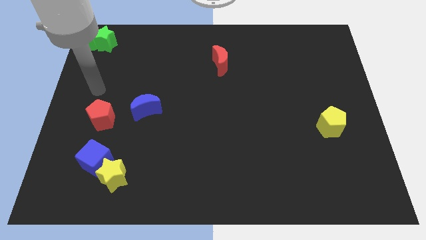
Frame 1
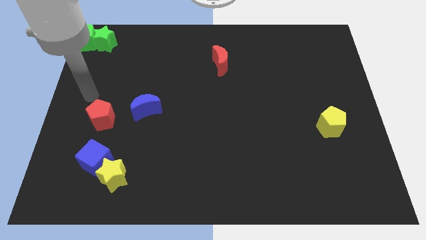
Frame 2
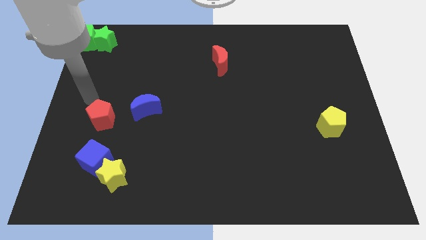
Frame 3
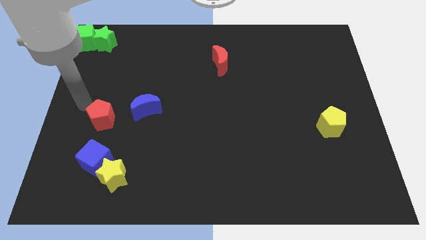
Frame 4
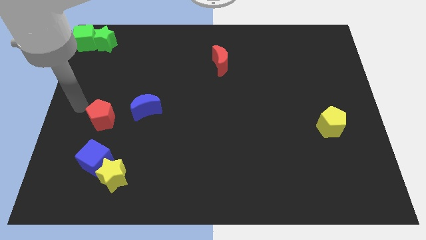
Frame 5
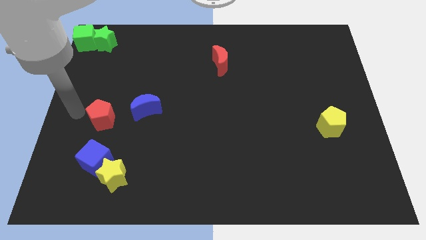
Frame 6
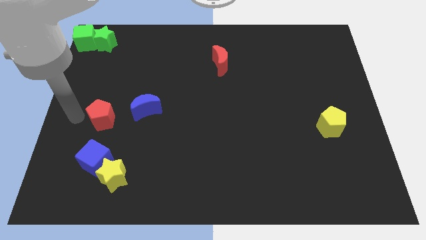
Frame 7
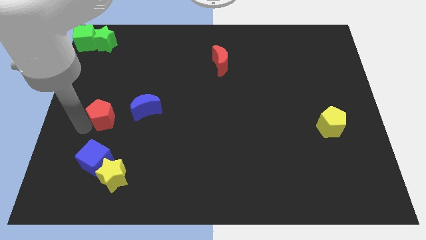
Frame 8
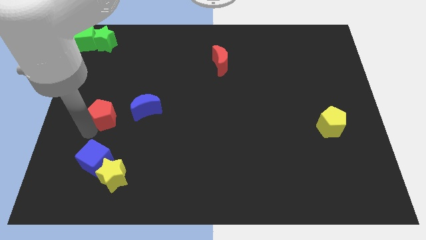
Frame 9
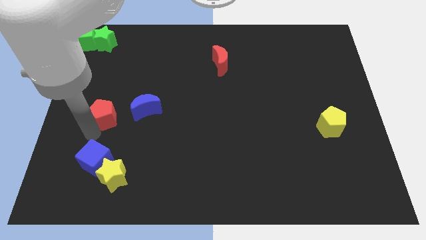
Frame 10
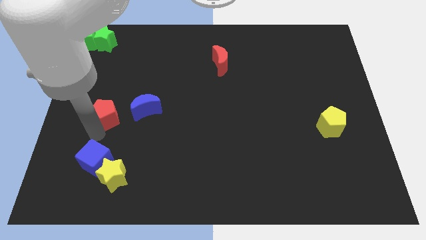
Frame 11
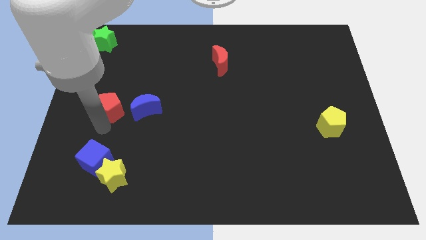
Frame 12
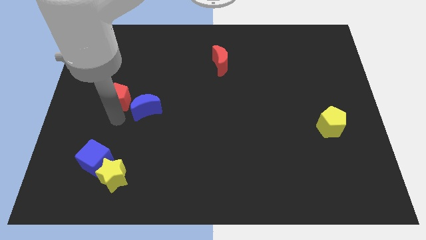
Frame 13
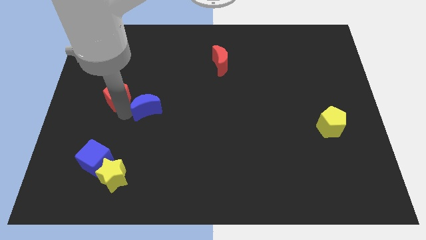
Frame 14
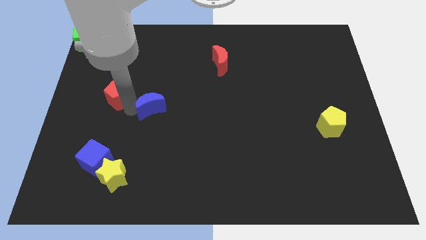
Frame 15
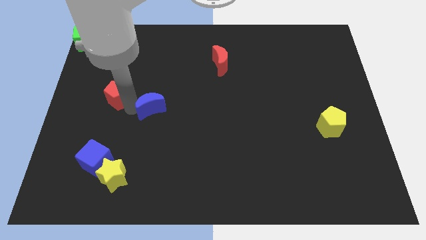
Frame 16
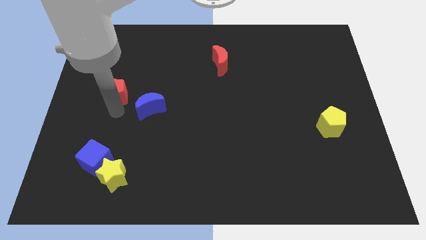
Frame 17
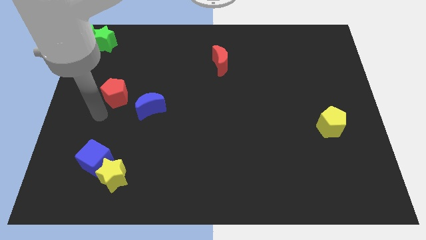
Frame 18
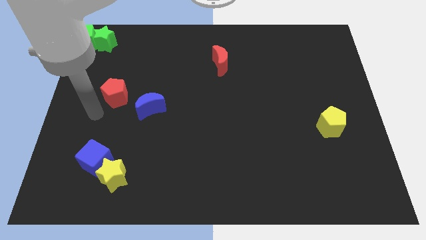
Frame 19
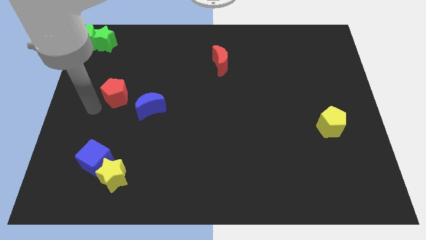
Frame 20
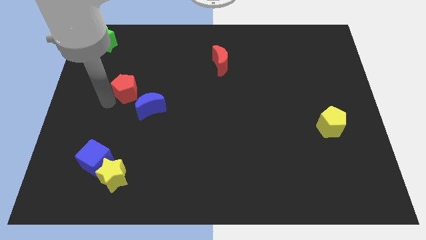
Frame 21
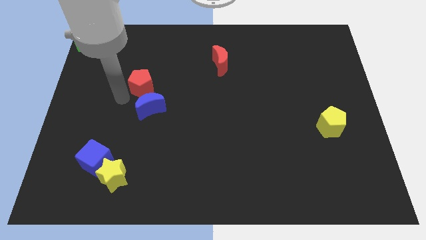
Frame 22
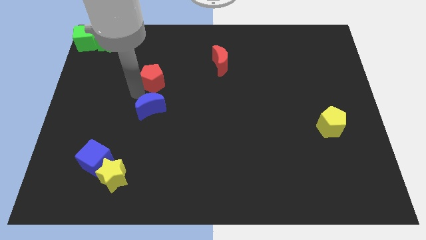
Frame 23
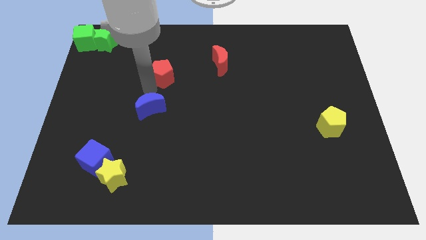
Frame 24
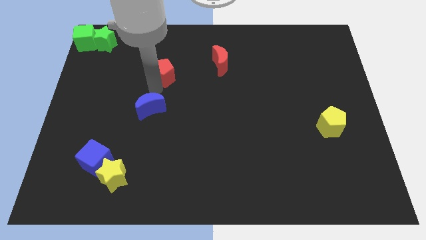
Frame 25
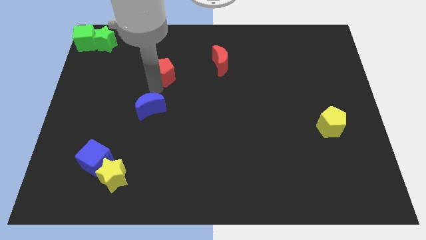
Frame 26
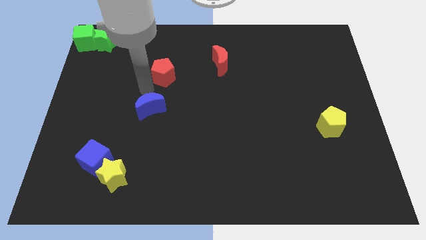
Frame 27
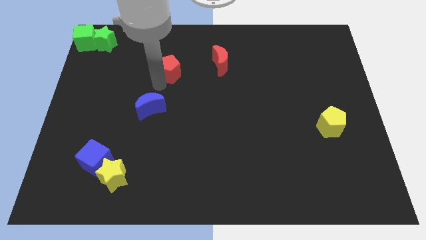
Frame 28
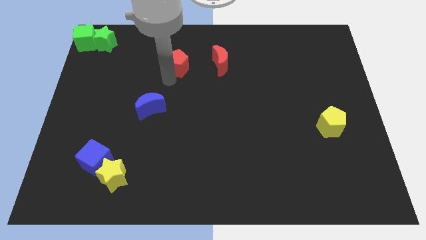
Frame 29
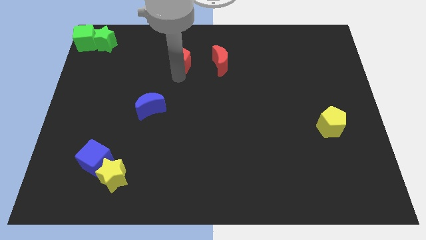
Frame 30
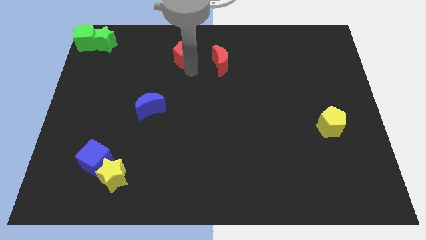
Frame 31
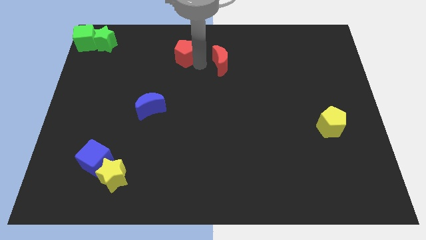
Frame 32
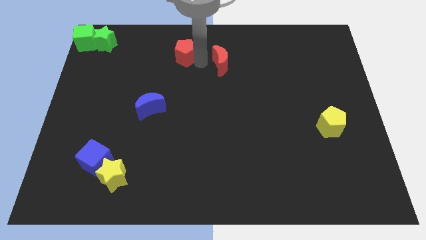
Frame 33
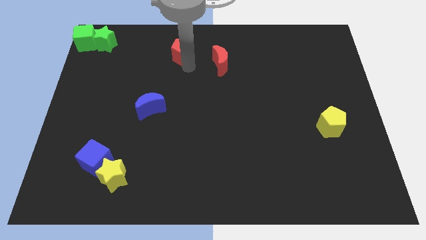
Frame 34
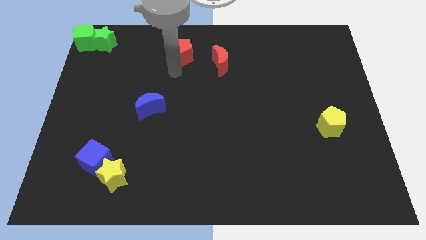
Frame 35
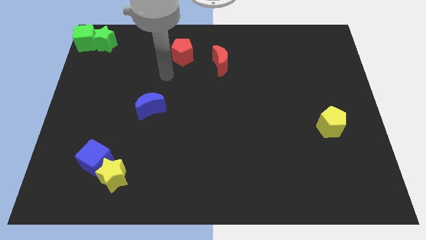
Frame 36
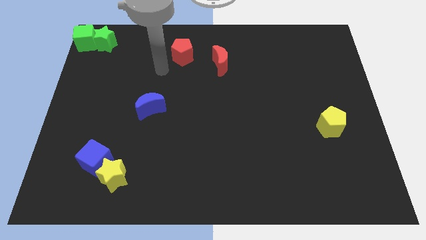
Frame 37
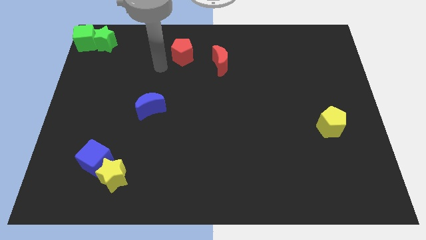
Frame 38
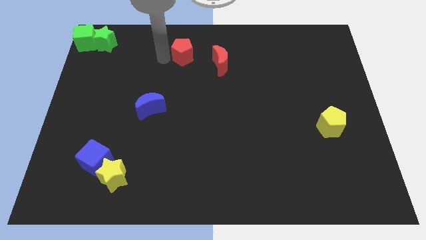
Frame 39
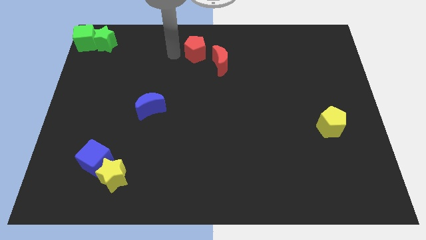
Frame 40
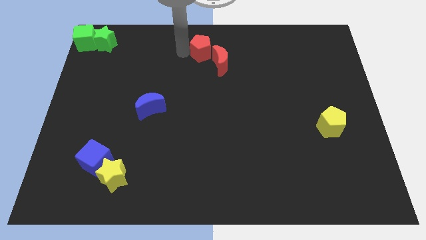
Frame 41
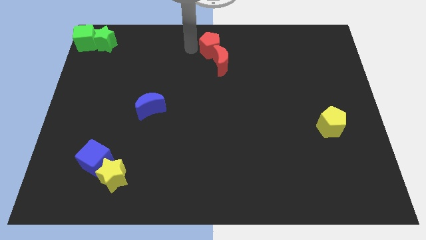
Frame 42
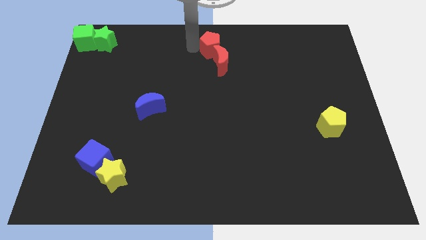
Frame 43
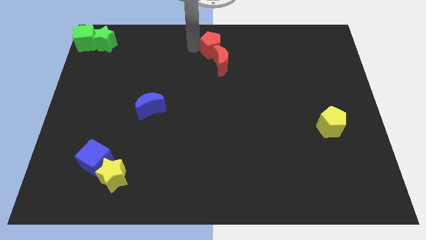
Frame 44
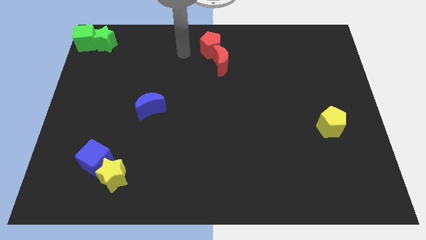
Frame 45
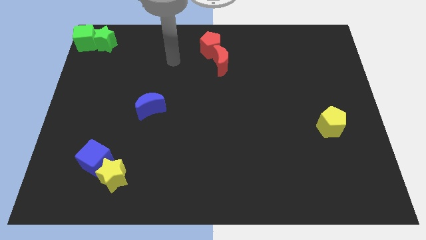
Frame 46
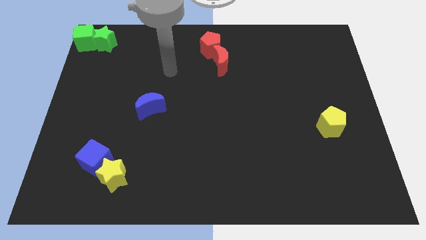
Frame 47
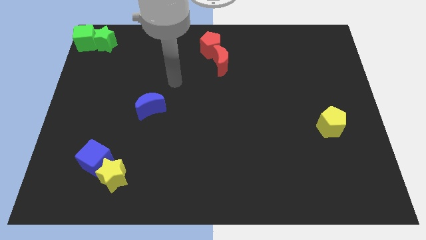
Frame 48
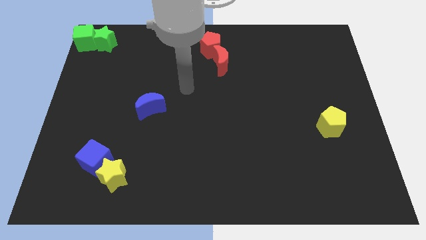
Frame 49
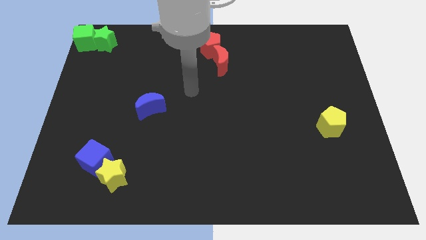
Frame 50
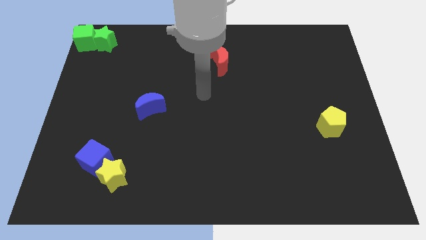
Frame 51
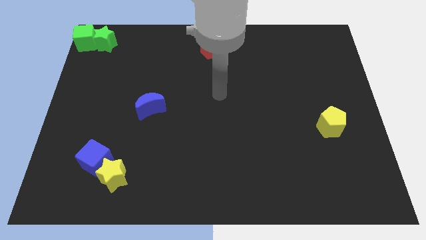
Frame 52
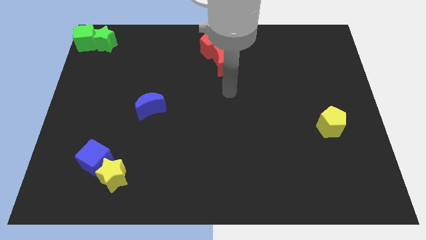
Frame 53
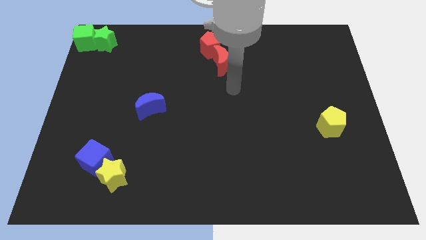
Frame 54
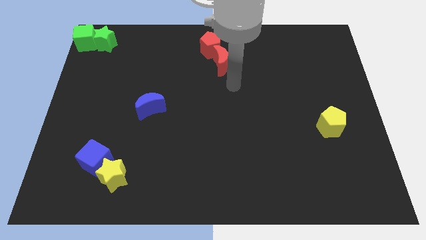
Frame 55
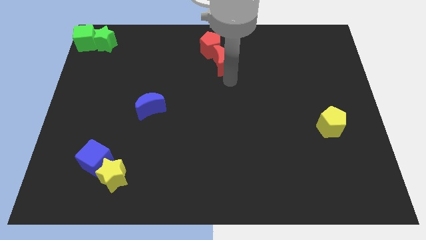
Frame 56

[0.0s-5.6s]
move the red pentagon above the red crescent

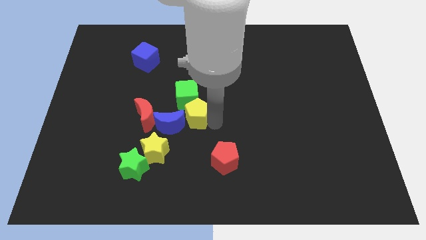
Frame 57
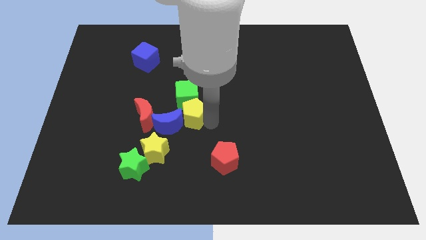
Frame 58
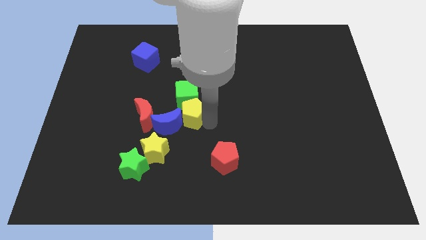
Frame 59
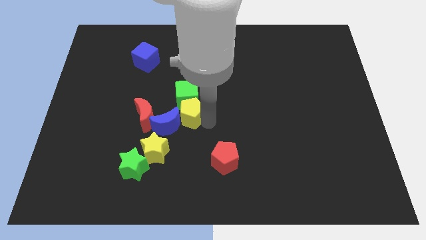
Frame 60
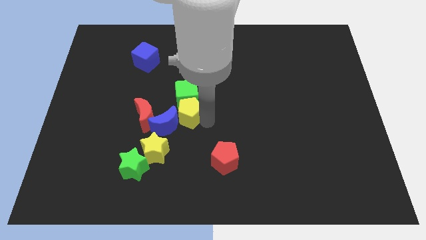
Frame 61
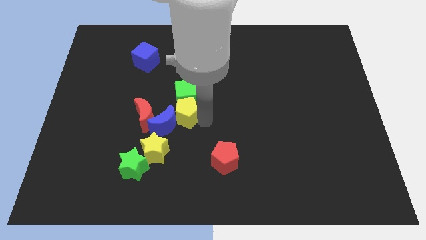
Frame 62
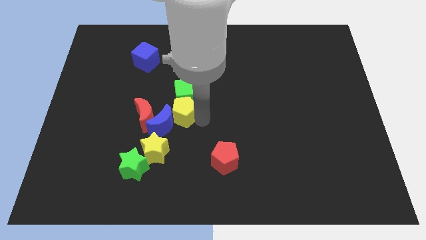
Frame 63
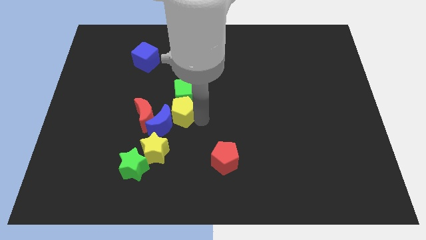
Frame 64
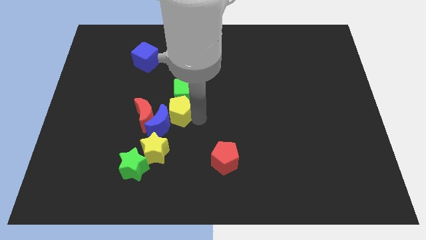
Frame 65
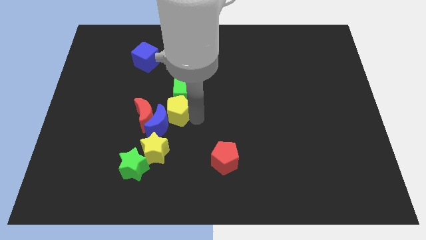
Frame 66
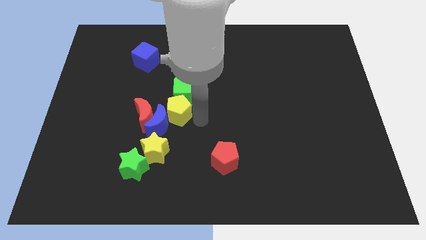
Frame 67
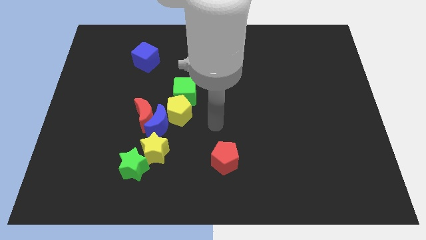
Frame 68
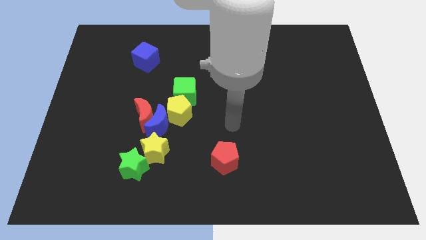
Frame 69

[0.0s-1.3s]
push the yellow pentagon into the blue crescent and the green cube

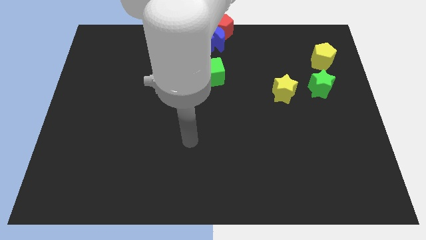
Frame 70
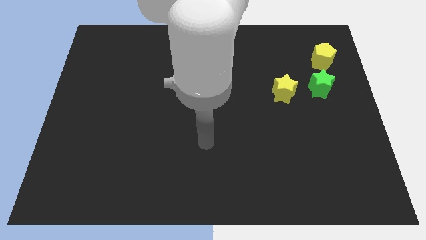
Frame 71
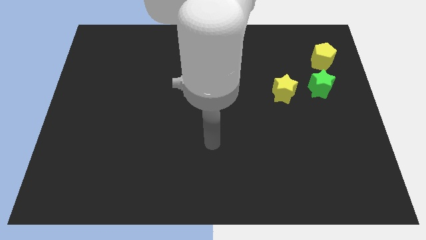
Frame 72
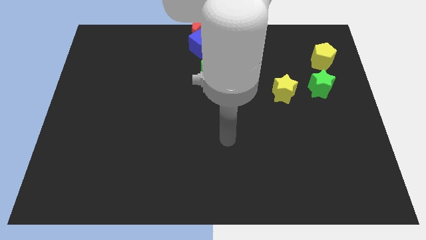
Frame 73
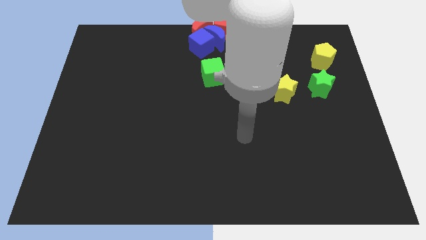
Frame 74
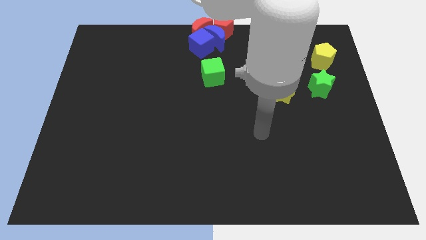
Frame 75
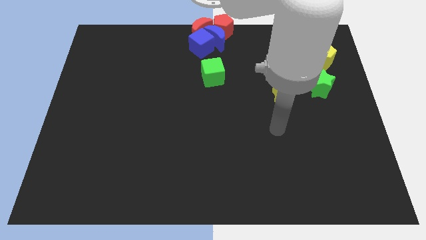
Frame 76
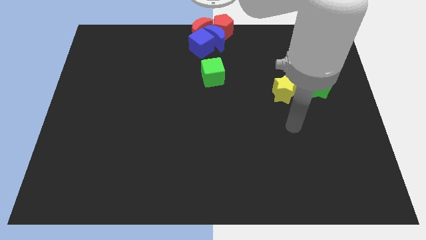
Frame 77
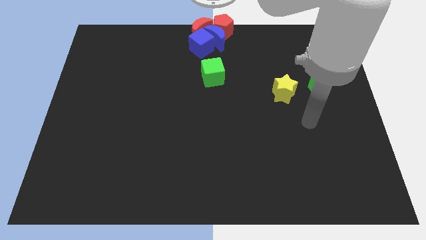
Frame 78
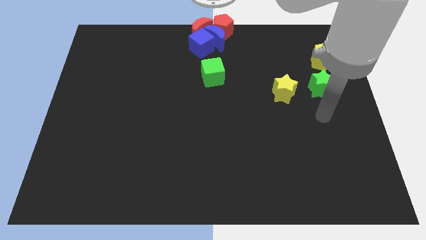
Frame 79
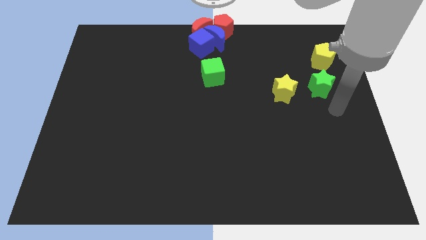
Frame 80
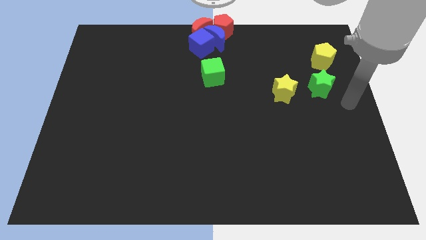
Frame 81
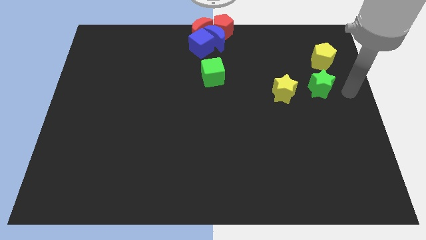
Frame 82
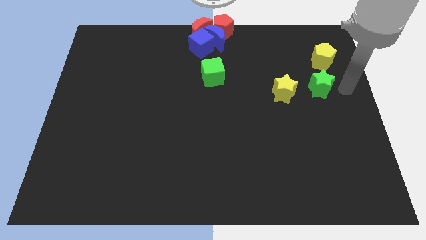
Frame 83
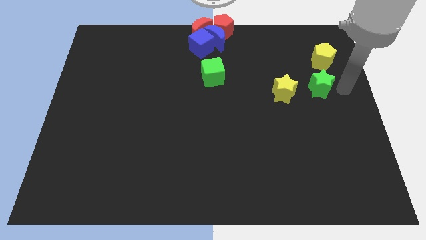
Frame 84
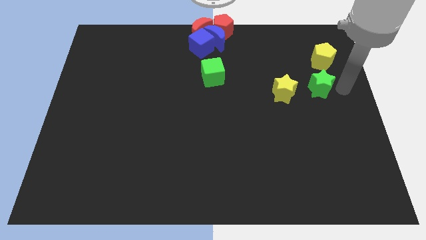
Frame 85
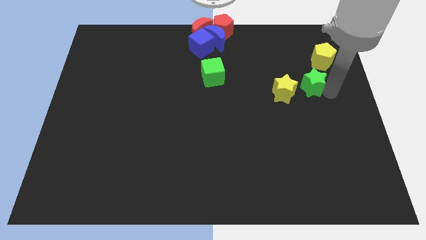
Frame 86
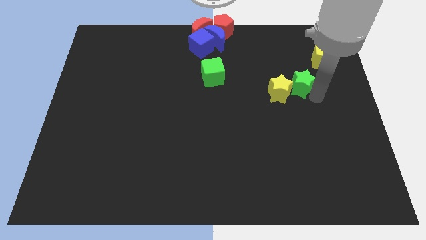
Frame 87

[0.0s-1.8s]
push the green star into the yellow star
